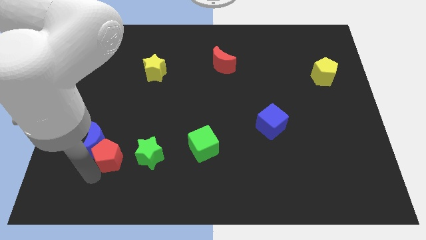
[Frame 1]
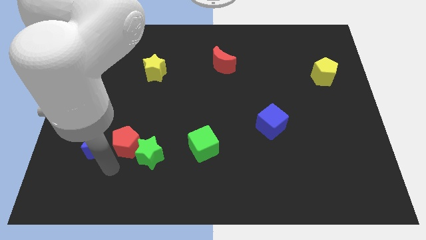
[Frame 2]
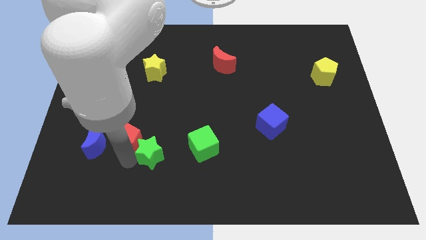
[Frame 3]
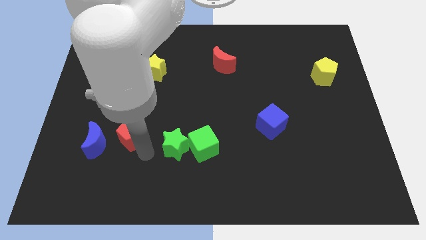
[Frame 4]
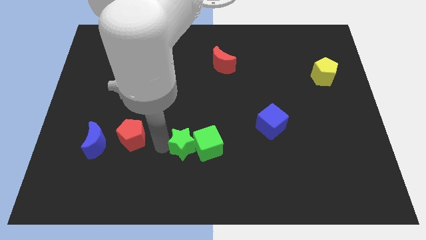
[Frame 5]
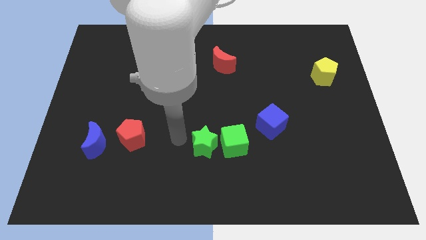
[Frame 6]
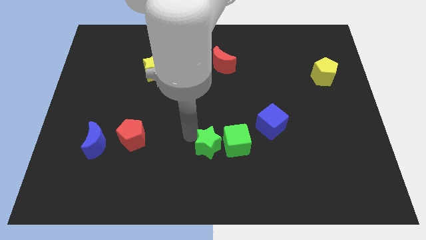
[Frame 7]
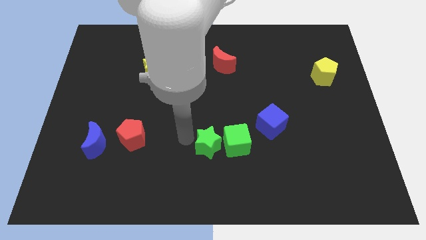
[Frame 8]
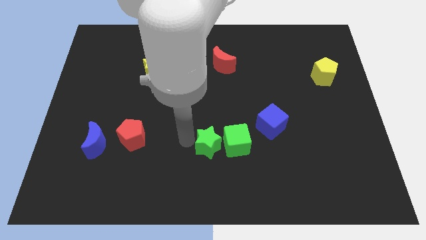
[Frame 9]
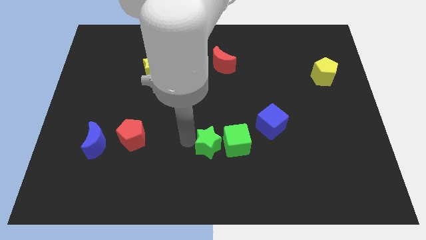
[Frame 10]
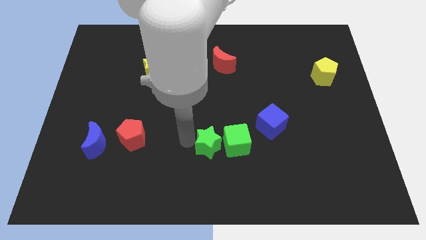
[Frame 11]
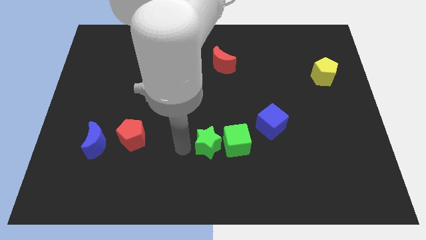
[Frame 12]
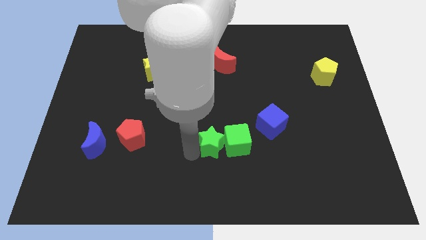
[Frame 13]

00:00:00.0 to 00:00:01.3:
push the green star into the green cube

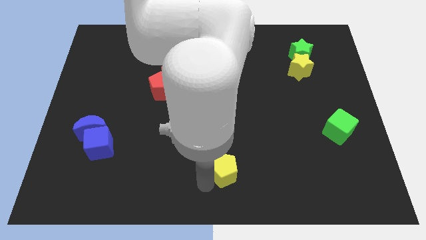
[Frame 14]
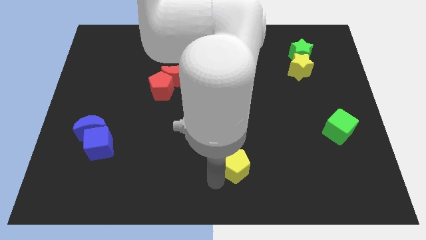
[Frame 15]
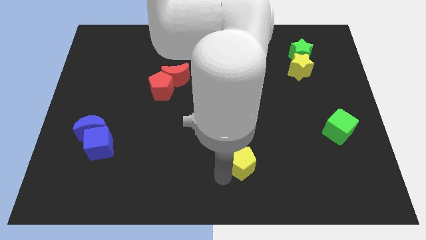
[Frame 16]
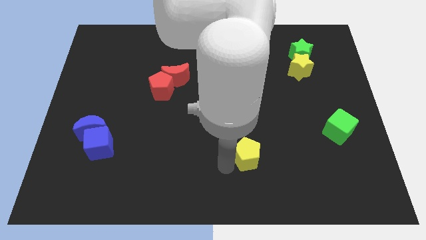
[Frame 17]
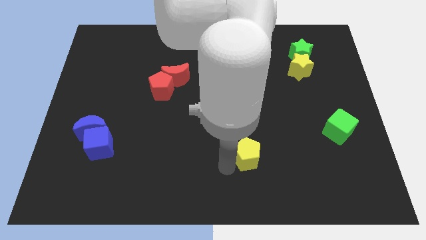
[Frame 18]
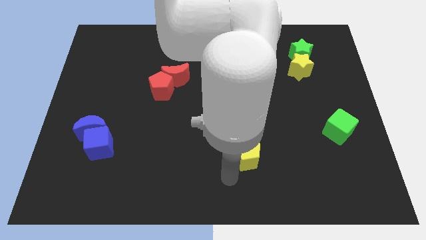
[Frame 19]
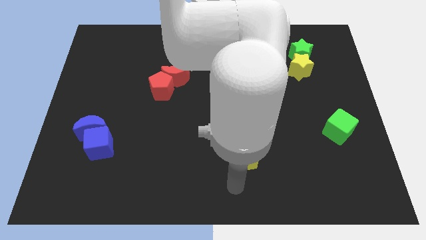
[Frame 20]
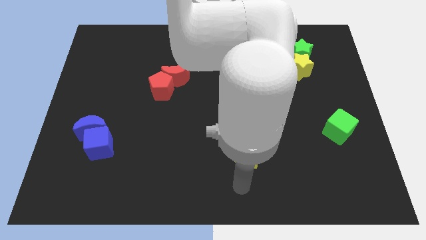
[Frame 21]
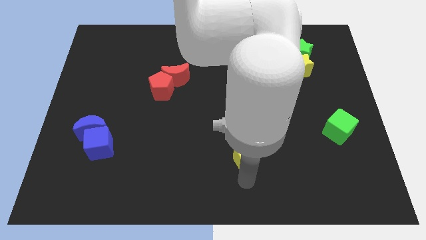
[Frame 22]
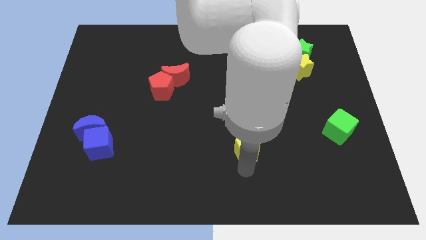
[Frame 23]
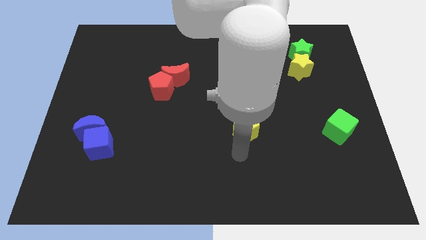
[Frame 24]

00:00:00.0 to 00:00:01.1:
move the yellow pentagon to the left of the green cube

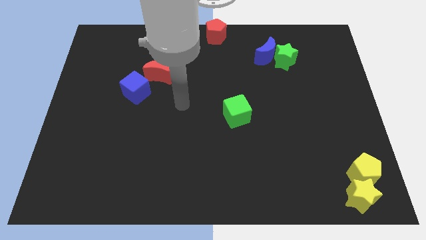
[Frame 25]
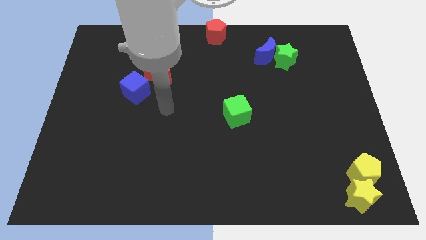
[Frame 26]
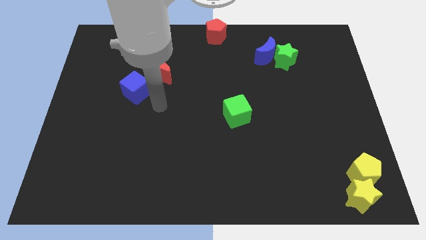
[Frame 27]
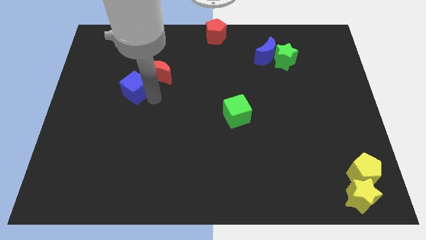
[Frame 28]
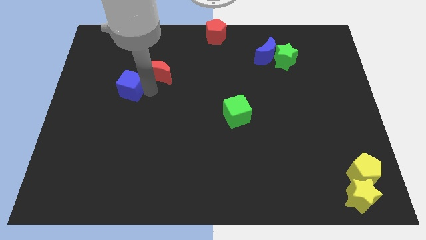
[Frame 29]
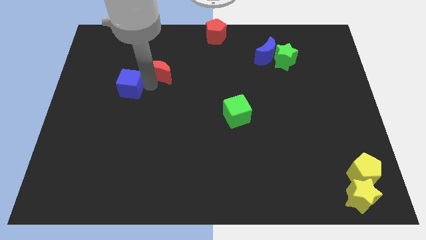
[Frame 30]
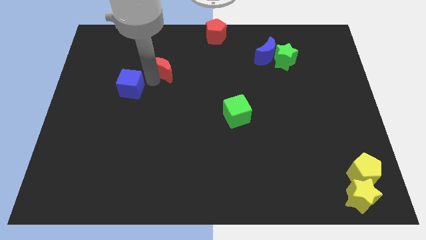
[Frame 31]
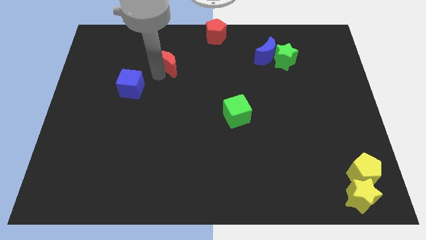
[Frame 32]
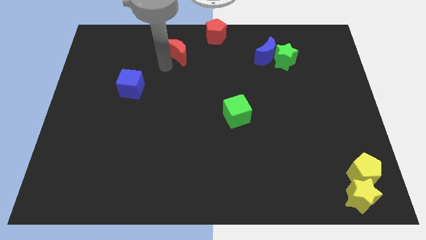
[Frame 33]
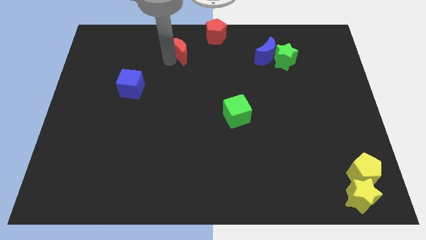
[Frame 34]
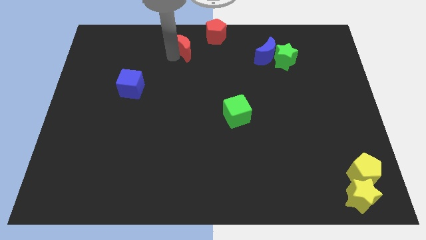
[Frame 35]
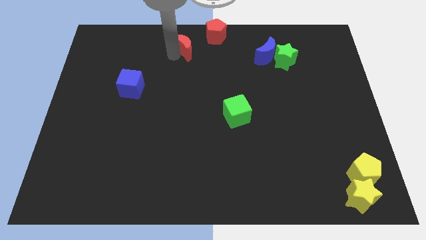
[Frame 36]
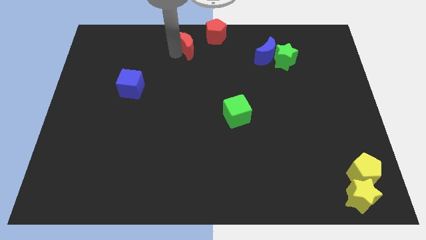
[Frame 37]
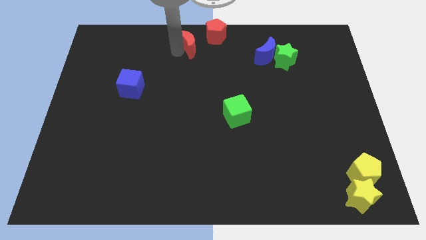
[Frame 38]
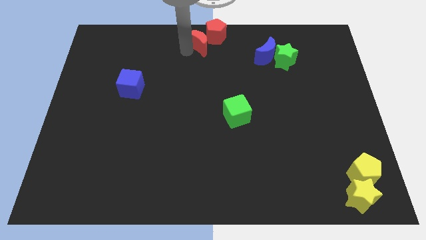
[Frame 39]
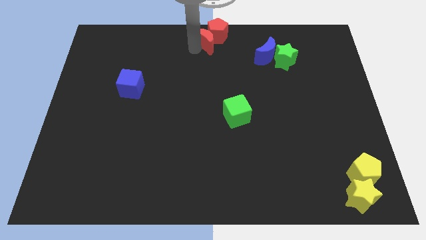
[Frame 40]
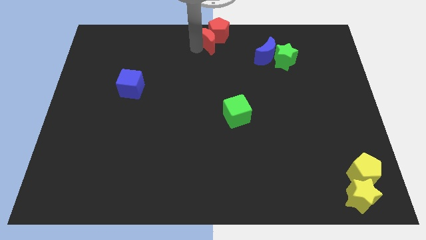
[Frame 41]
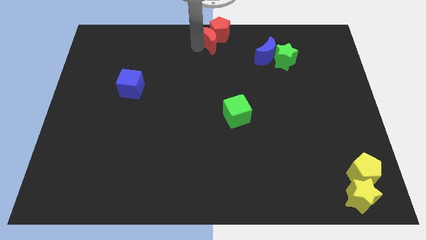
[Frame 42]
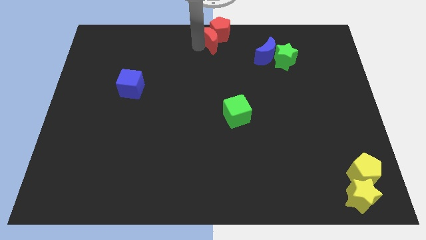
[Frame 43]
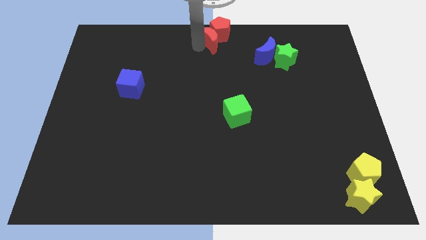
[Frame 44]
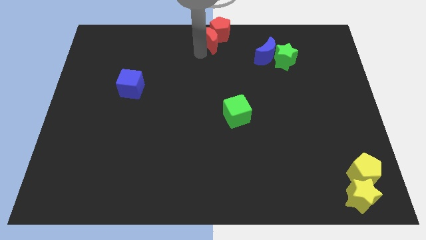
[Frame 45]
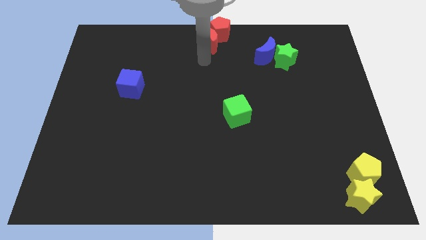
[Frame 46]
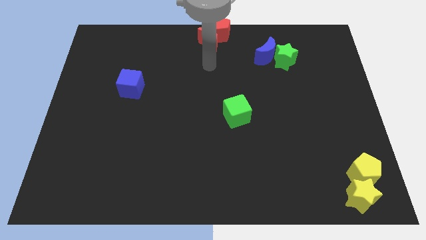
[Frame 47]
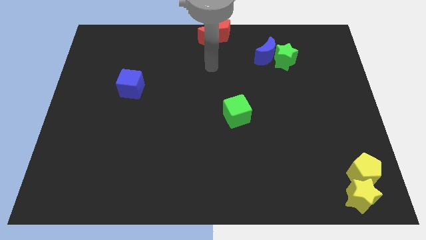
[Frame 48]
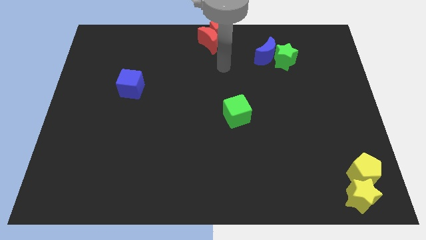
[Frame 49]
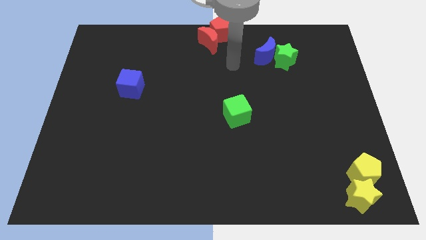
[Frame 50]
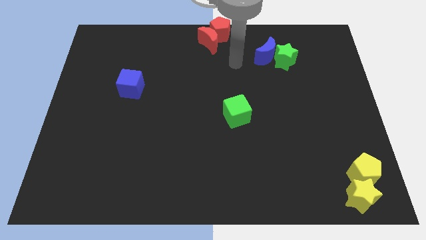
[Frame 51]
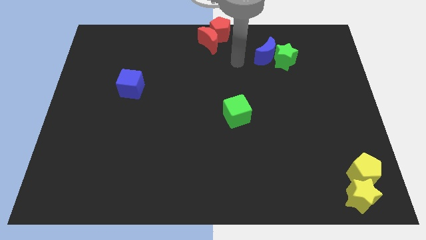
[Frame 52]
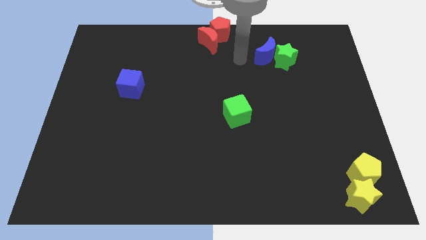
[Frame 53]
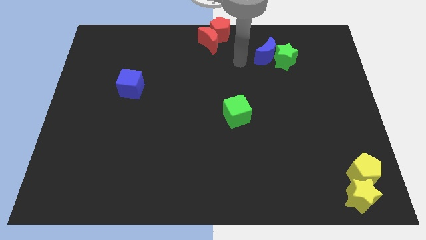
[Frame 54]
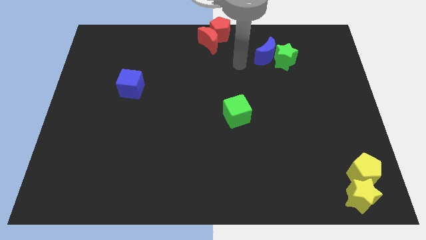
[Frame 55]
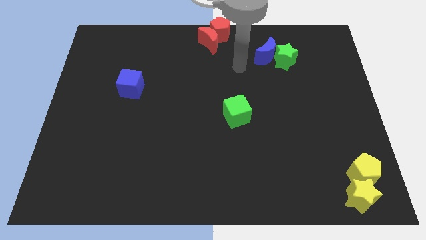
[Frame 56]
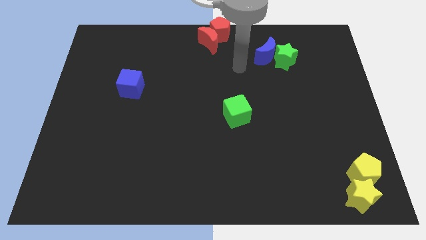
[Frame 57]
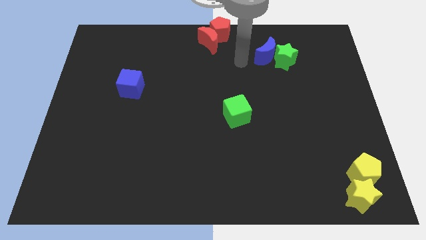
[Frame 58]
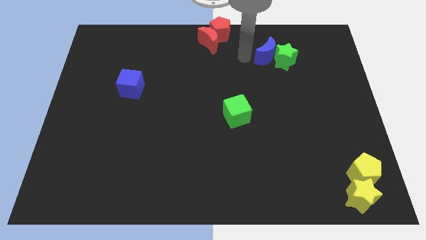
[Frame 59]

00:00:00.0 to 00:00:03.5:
push the red moon into the red pentagon

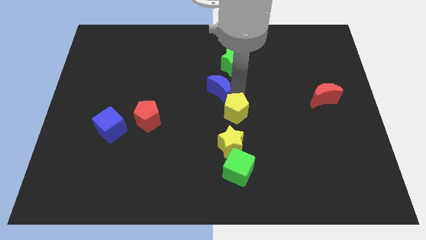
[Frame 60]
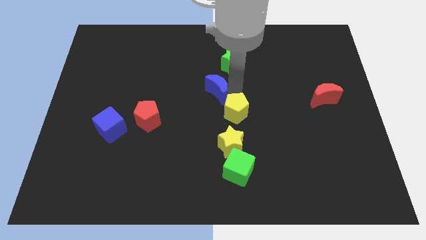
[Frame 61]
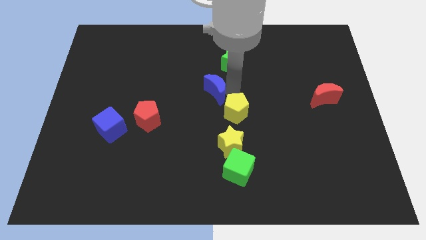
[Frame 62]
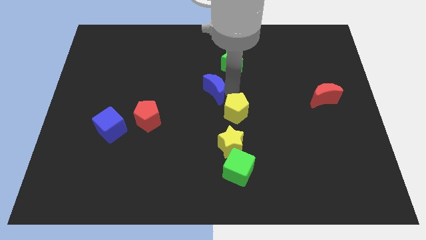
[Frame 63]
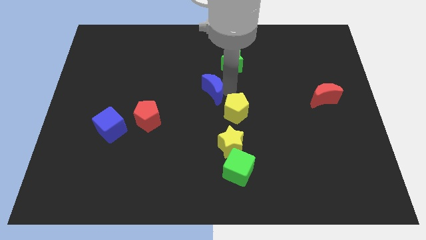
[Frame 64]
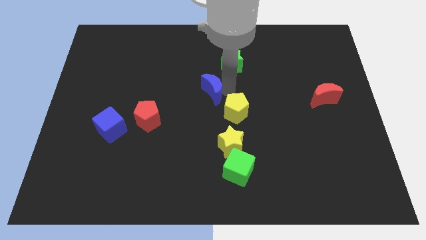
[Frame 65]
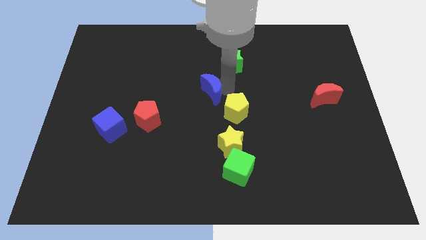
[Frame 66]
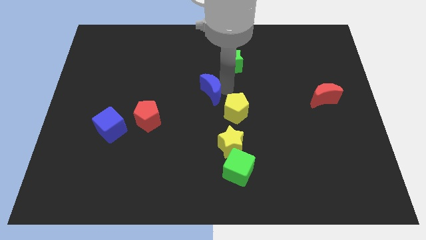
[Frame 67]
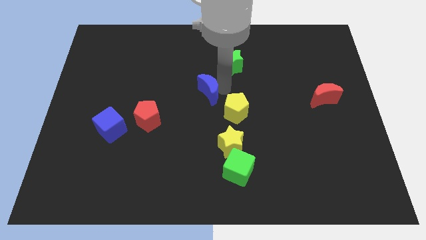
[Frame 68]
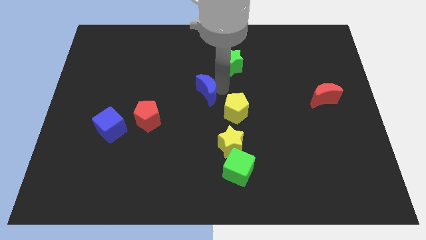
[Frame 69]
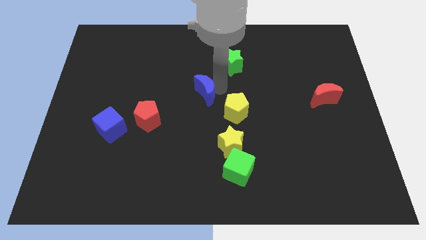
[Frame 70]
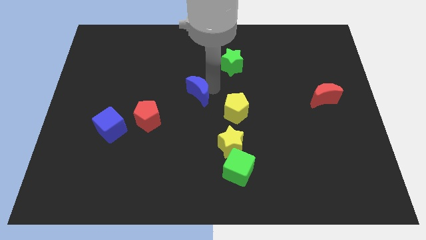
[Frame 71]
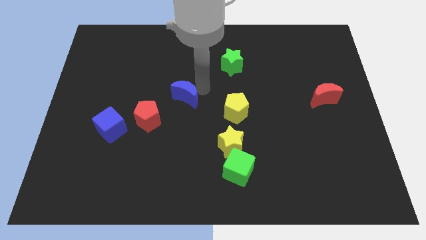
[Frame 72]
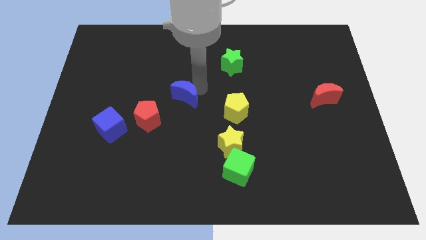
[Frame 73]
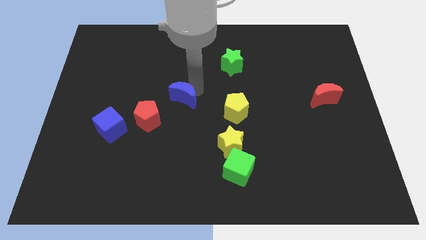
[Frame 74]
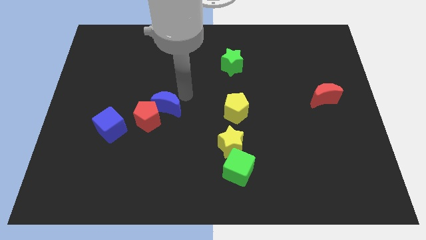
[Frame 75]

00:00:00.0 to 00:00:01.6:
push the blue moon into the red pentagon

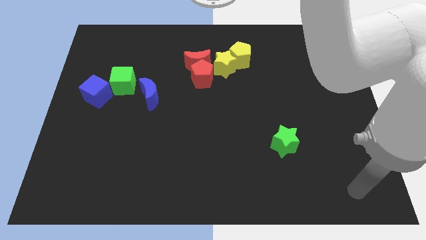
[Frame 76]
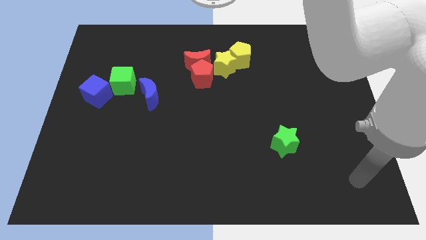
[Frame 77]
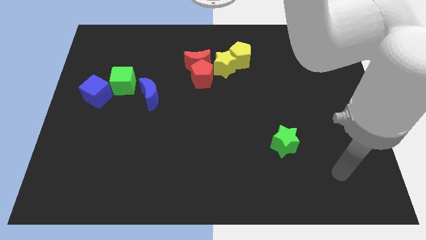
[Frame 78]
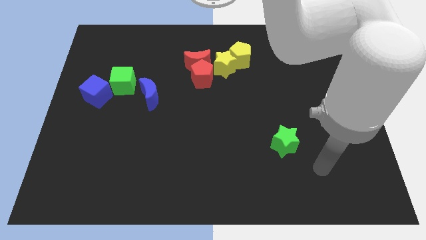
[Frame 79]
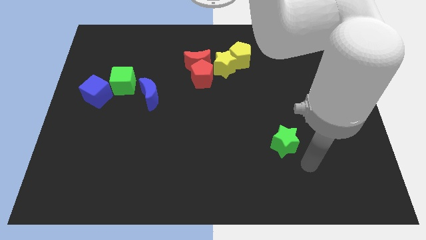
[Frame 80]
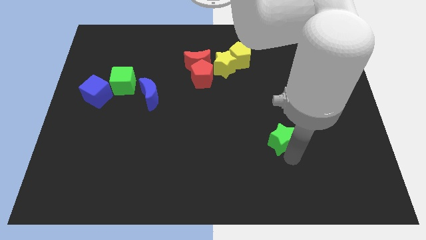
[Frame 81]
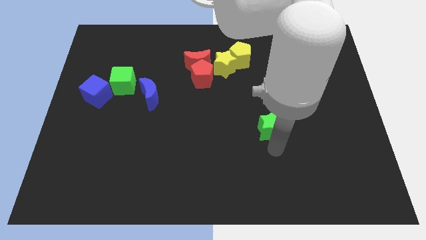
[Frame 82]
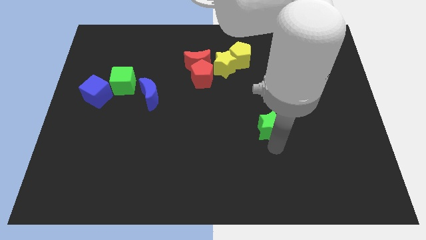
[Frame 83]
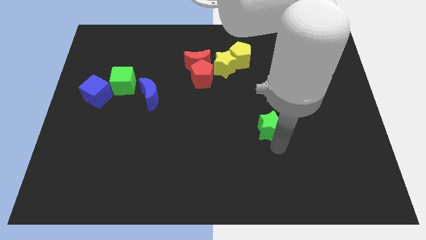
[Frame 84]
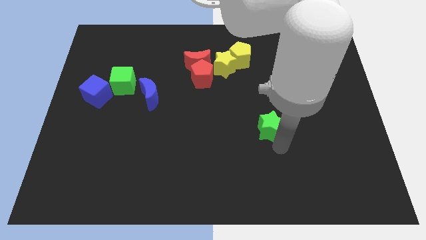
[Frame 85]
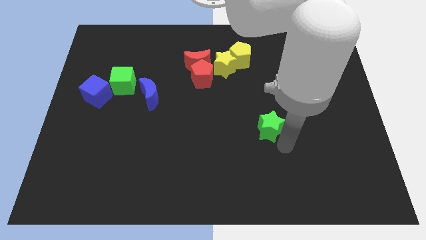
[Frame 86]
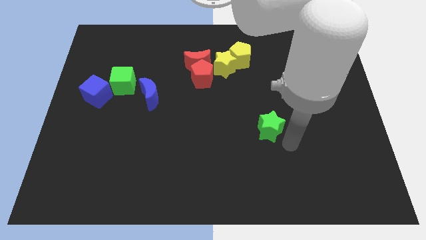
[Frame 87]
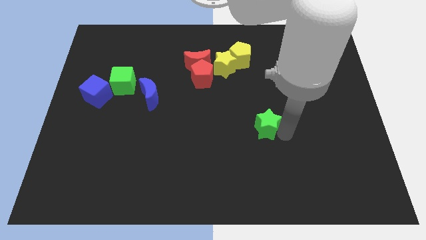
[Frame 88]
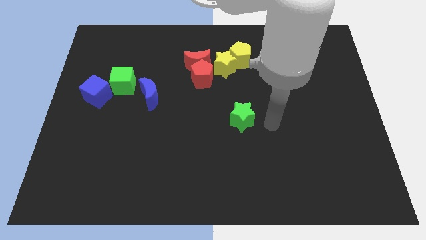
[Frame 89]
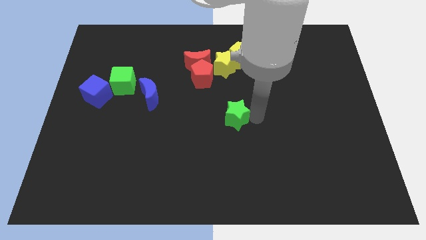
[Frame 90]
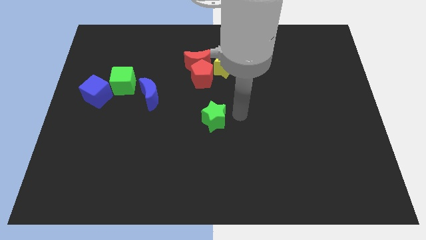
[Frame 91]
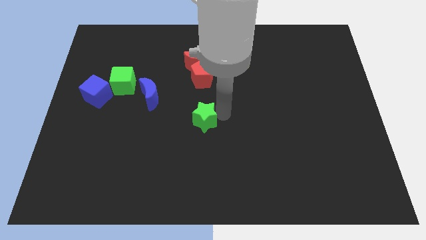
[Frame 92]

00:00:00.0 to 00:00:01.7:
place the green star vertical to red pentagon
